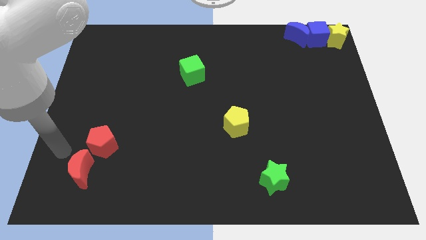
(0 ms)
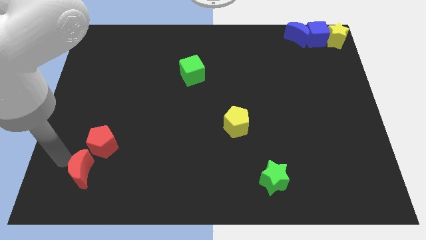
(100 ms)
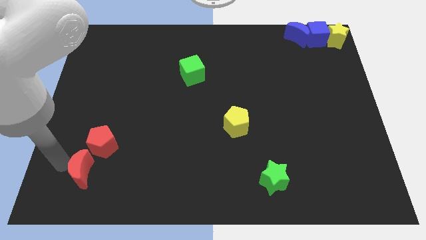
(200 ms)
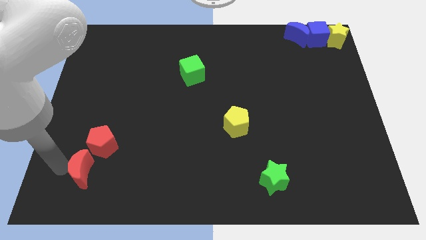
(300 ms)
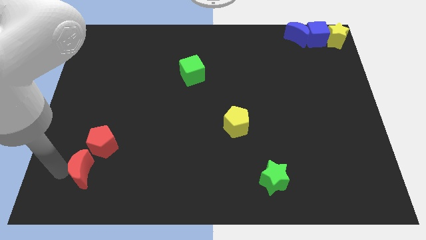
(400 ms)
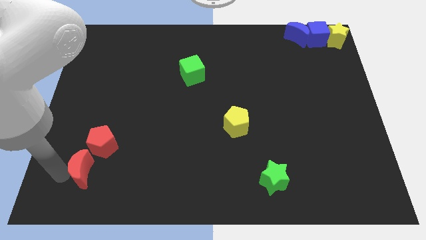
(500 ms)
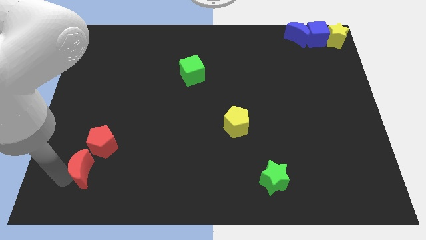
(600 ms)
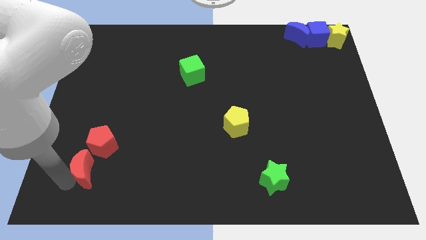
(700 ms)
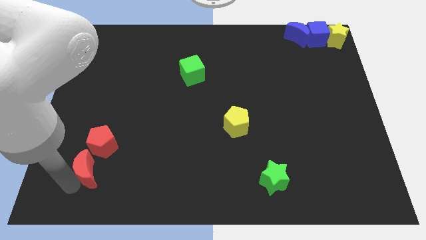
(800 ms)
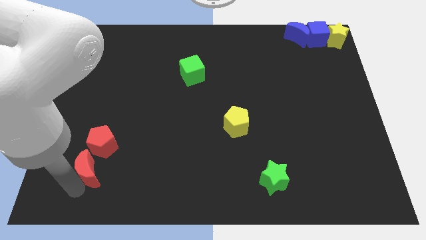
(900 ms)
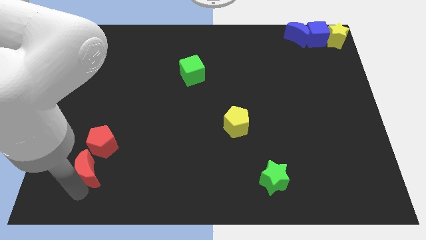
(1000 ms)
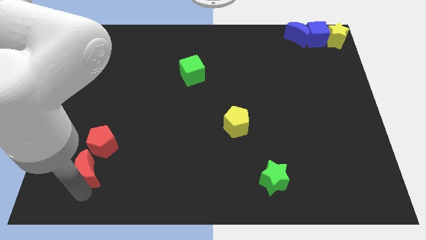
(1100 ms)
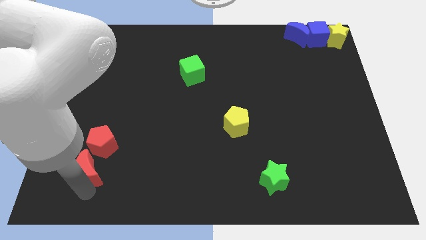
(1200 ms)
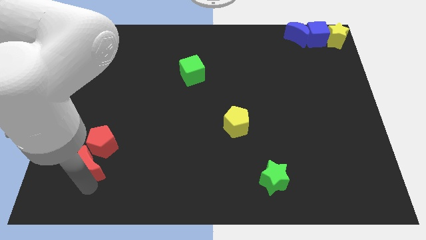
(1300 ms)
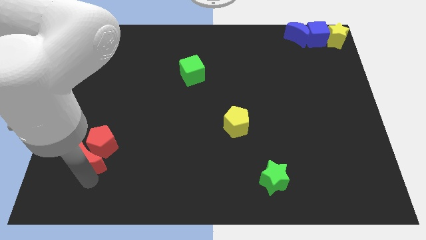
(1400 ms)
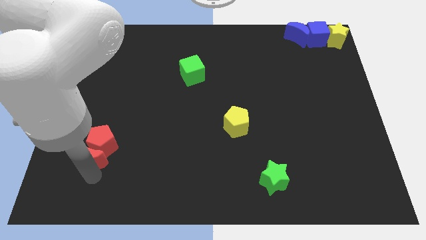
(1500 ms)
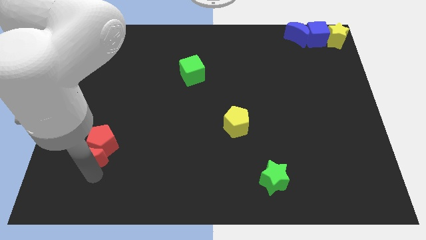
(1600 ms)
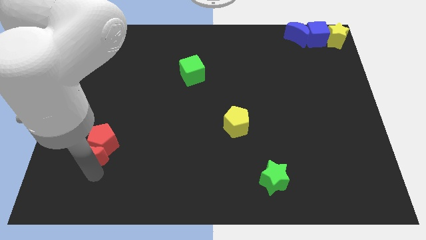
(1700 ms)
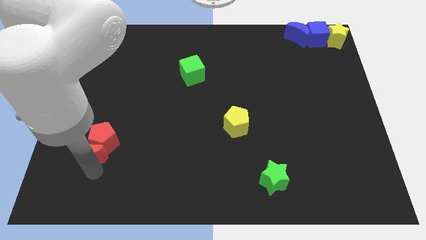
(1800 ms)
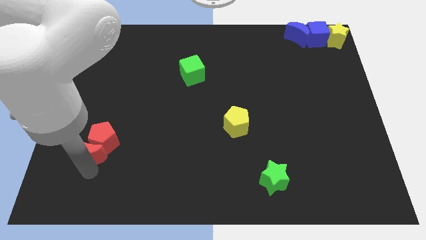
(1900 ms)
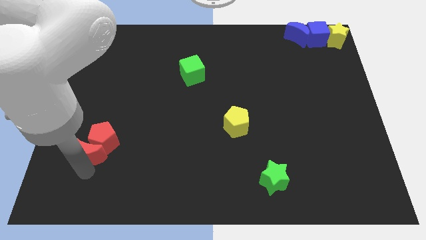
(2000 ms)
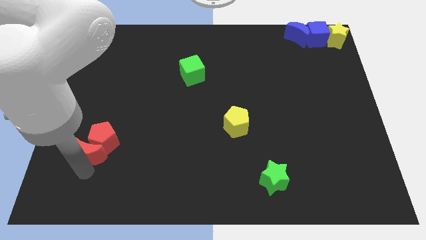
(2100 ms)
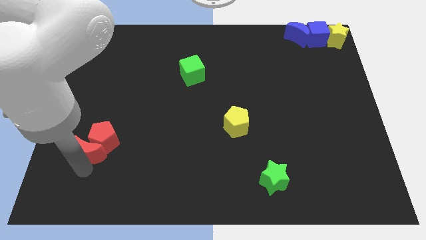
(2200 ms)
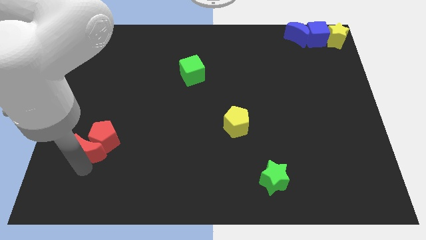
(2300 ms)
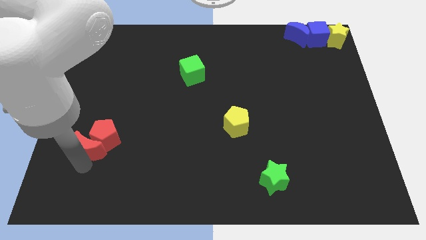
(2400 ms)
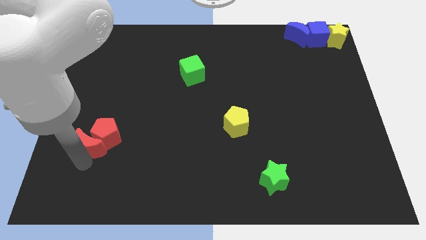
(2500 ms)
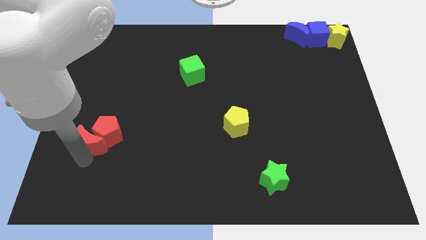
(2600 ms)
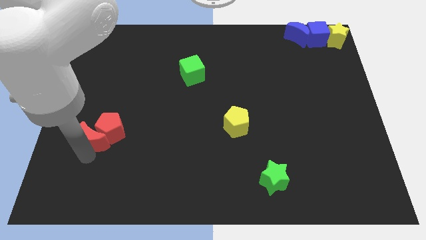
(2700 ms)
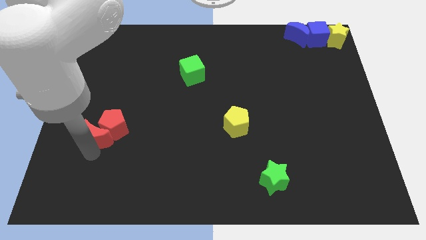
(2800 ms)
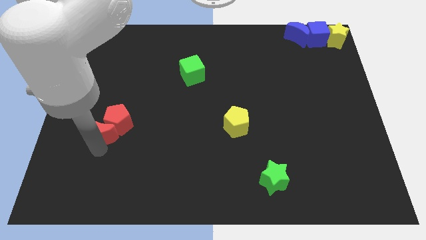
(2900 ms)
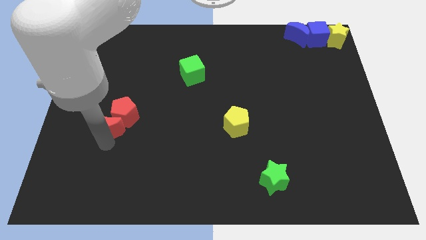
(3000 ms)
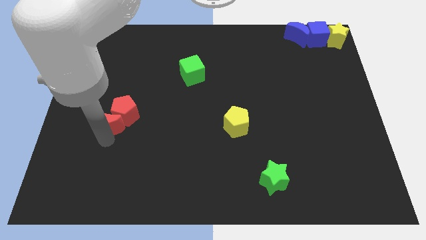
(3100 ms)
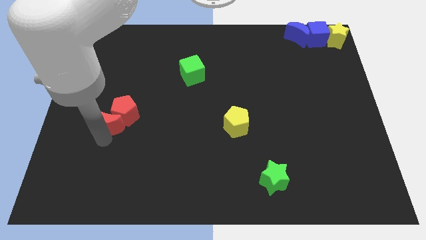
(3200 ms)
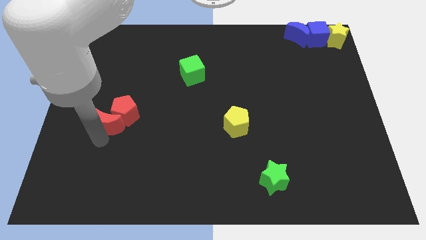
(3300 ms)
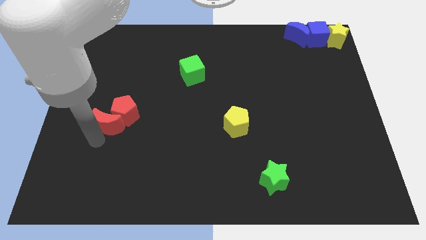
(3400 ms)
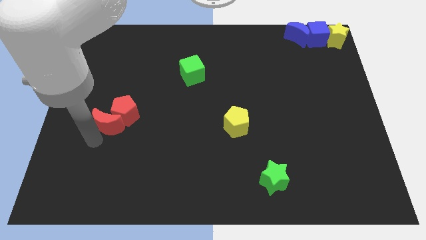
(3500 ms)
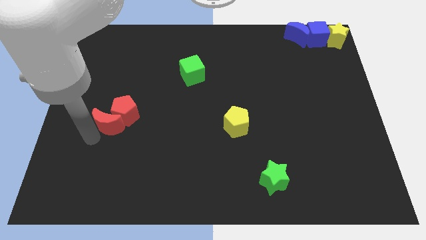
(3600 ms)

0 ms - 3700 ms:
move the group of red blocks upwards

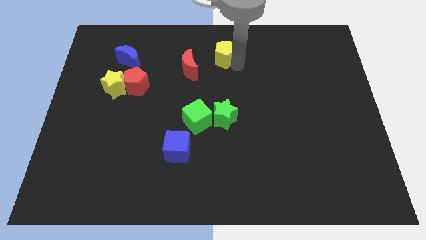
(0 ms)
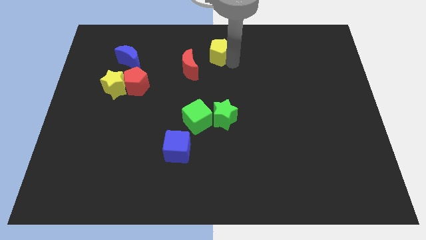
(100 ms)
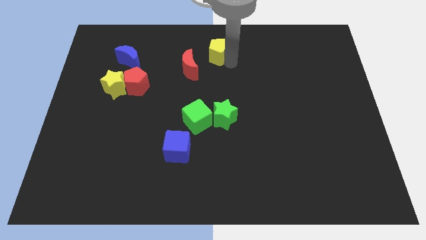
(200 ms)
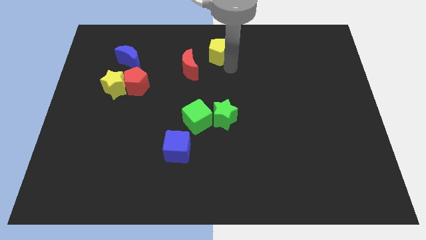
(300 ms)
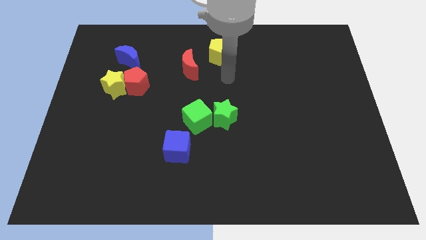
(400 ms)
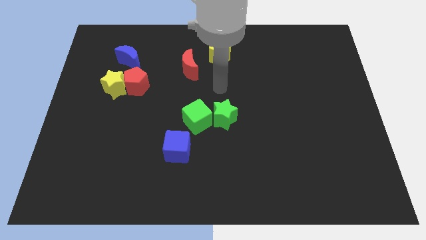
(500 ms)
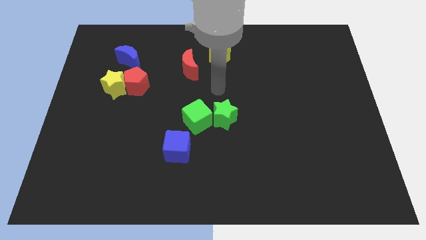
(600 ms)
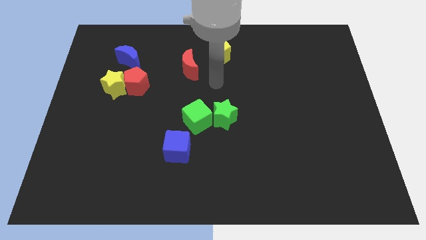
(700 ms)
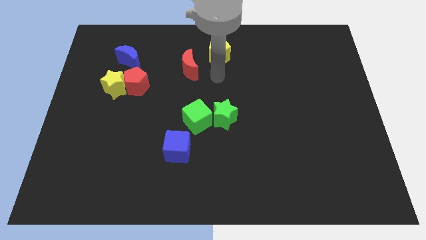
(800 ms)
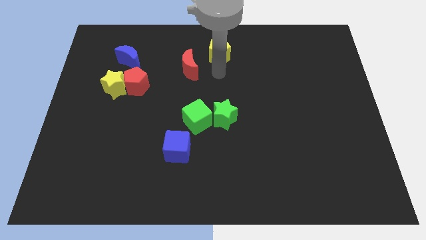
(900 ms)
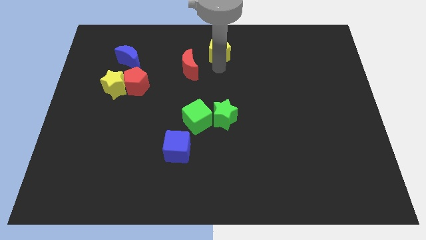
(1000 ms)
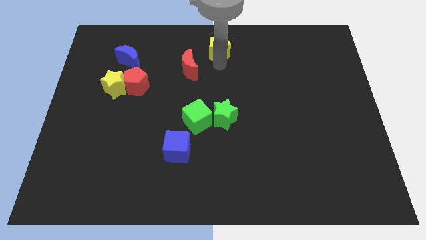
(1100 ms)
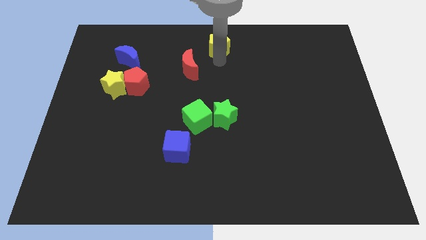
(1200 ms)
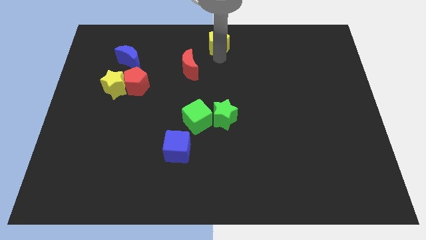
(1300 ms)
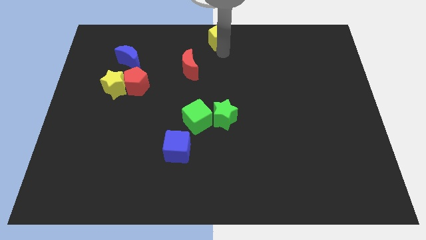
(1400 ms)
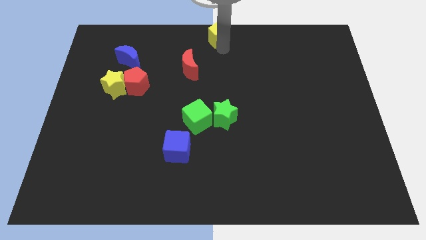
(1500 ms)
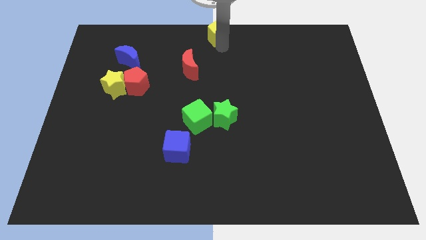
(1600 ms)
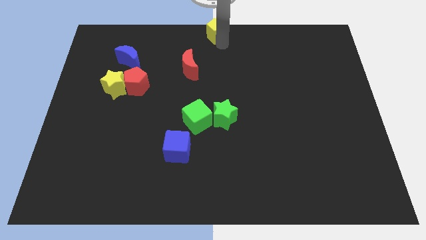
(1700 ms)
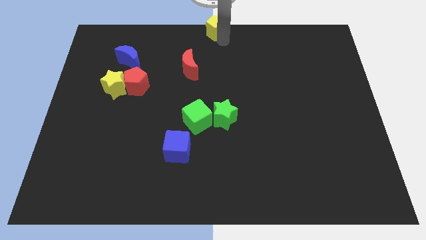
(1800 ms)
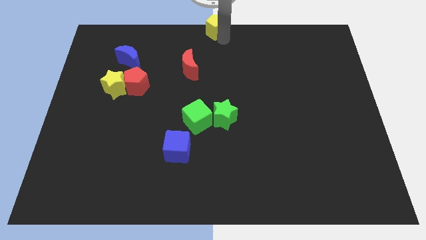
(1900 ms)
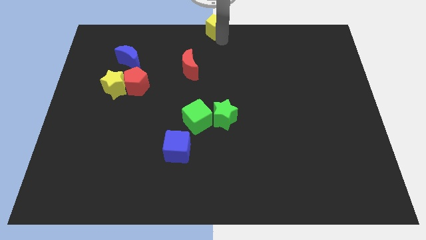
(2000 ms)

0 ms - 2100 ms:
slide yellow pentagon to top center

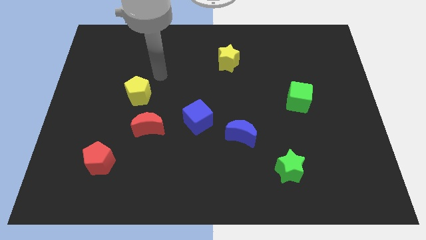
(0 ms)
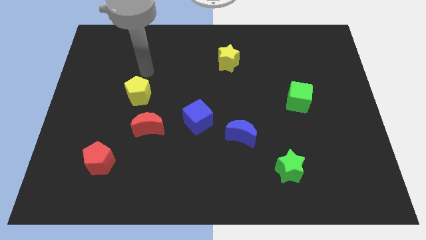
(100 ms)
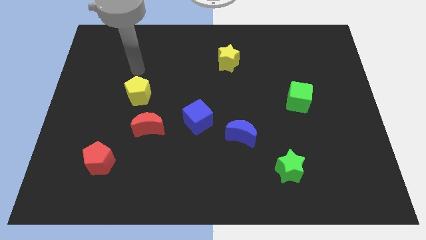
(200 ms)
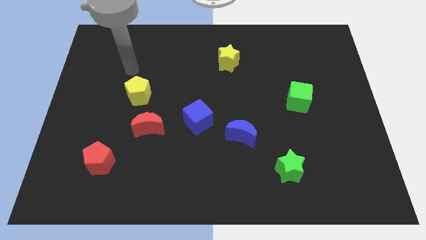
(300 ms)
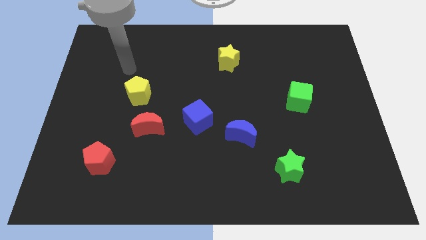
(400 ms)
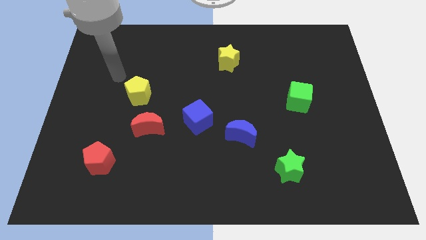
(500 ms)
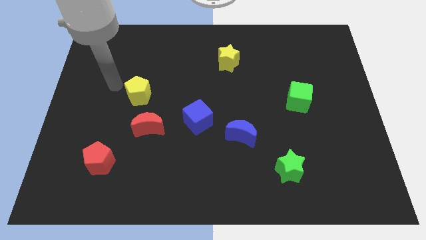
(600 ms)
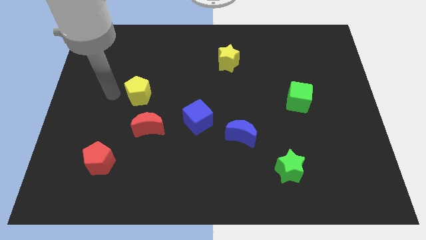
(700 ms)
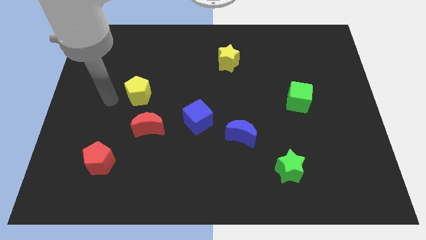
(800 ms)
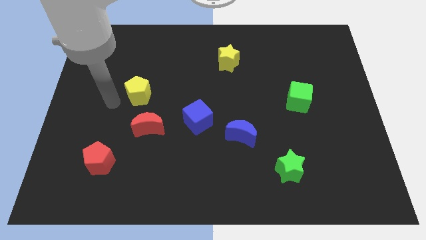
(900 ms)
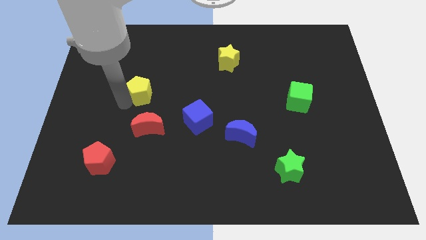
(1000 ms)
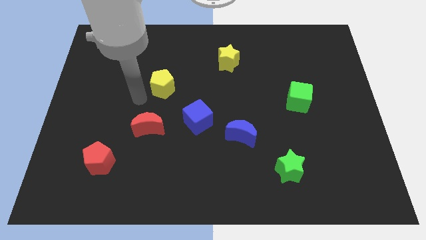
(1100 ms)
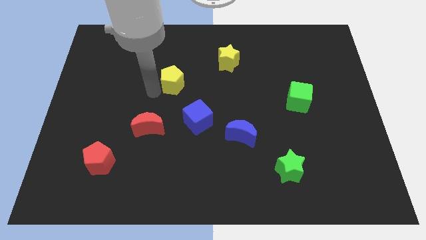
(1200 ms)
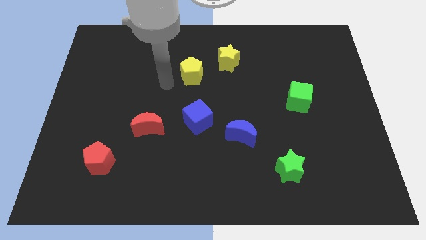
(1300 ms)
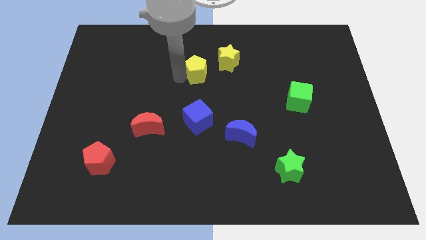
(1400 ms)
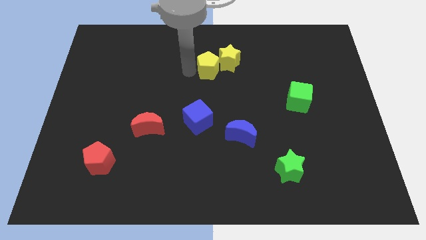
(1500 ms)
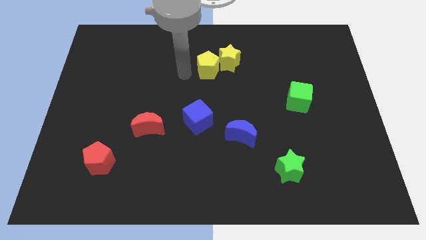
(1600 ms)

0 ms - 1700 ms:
push the yellow pentagon into the yellow star

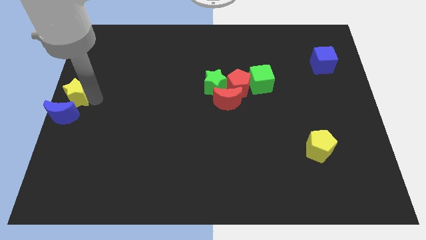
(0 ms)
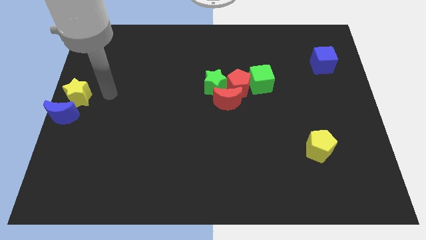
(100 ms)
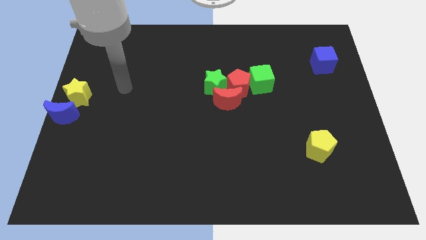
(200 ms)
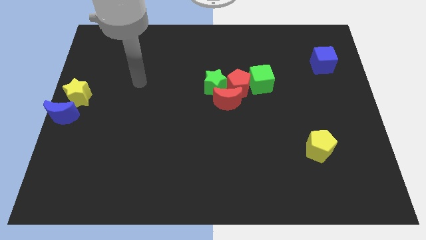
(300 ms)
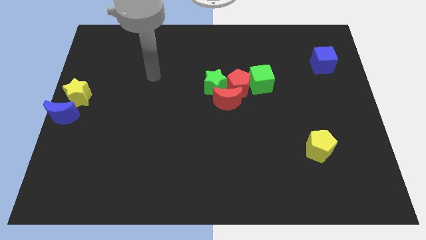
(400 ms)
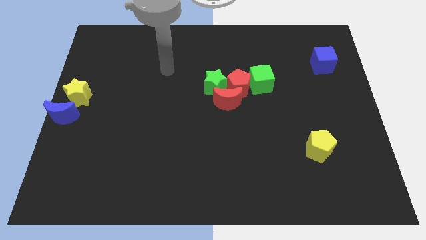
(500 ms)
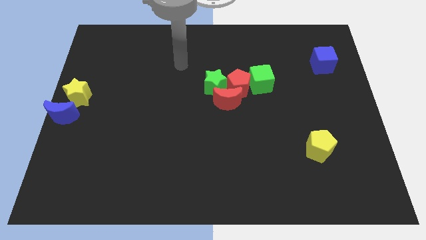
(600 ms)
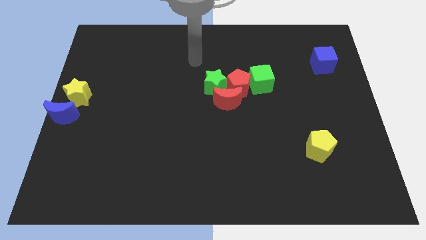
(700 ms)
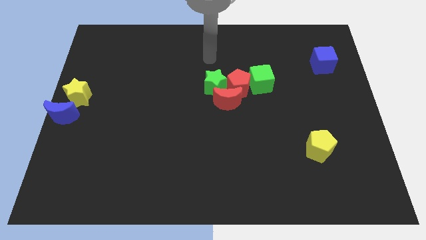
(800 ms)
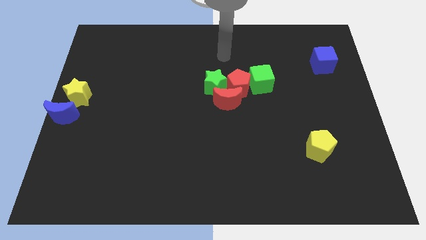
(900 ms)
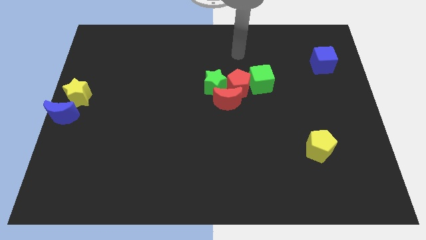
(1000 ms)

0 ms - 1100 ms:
place your arm above the red pentagon

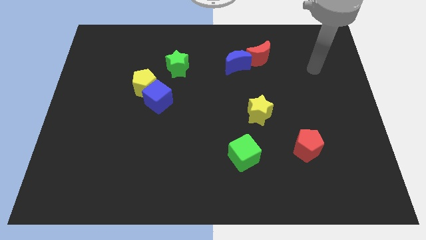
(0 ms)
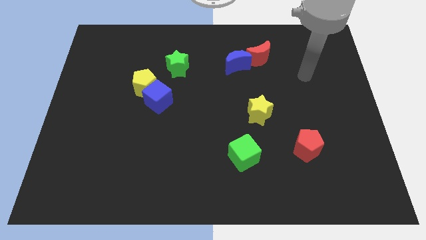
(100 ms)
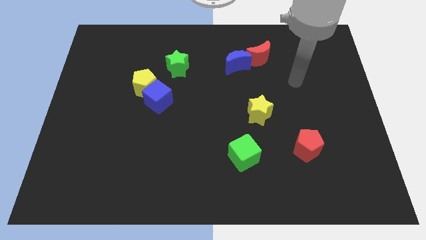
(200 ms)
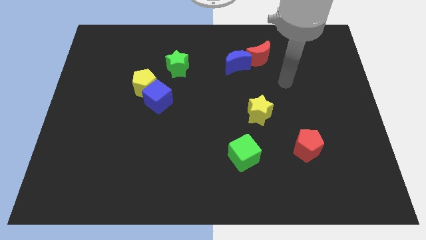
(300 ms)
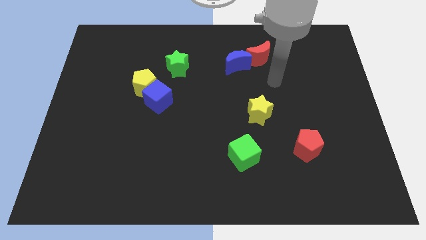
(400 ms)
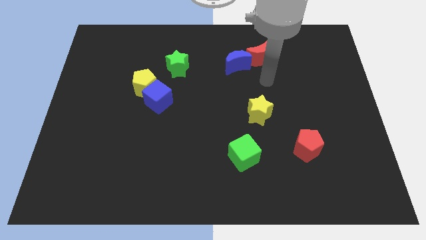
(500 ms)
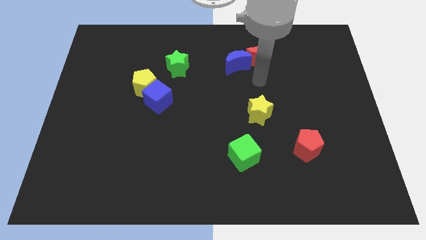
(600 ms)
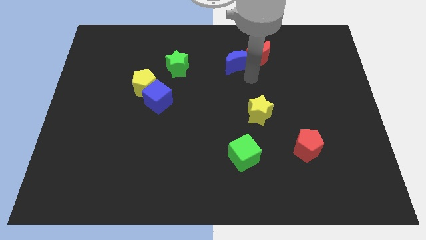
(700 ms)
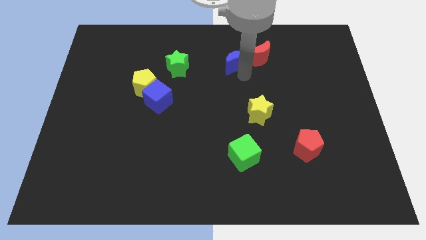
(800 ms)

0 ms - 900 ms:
move your arm to the bottom of the blue moon
